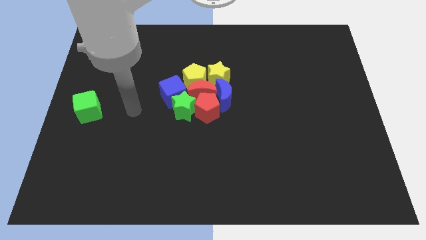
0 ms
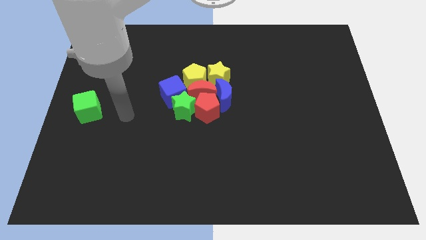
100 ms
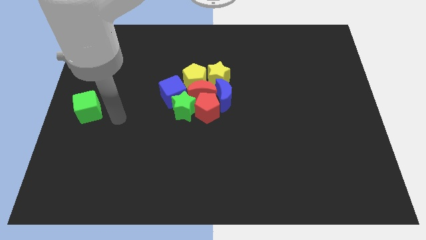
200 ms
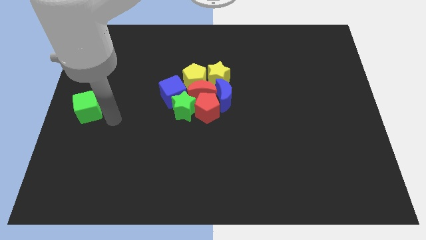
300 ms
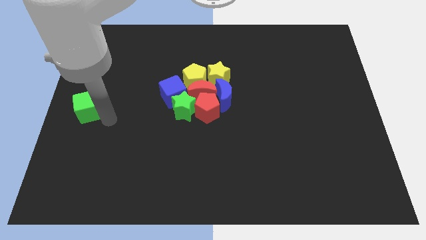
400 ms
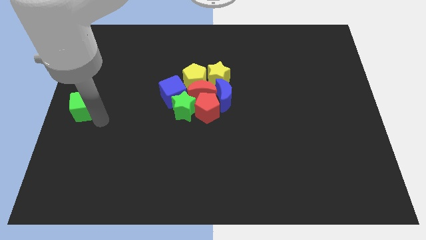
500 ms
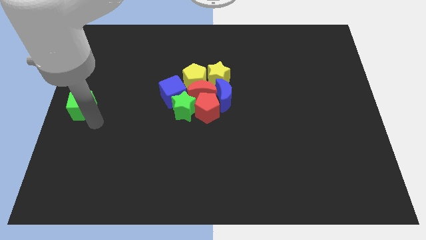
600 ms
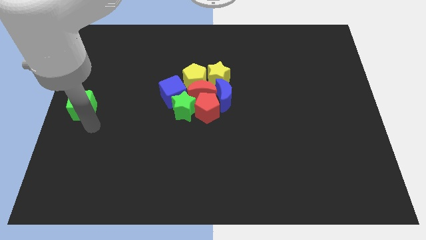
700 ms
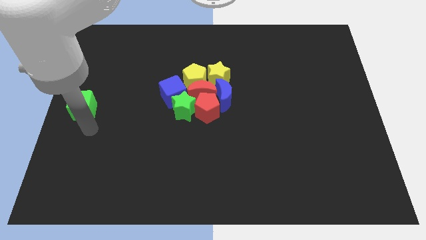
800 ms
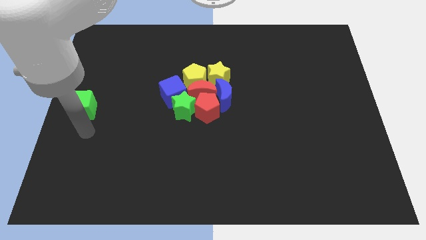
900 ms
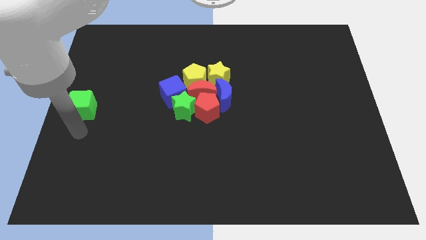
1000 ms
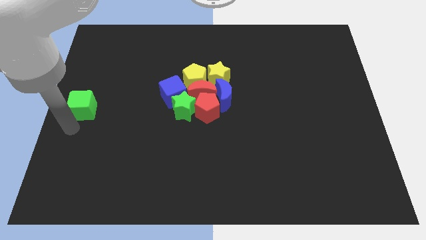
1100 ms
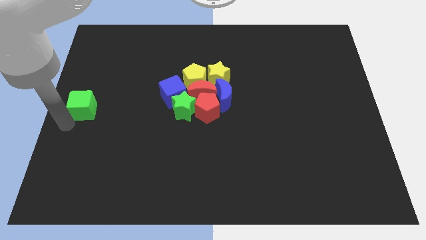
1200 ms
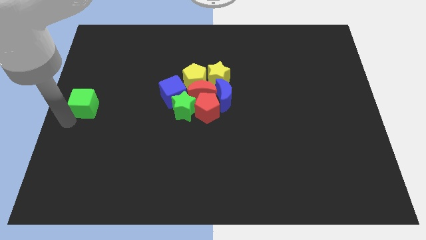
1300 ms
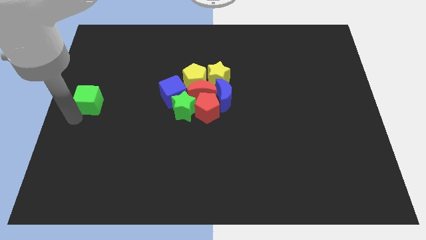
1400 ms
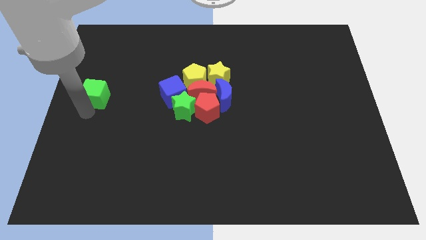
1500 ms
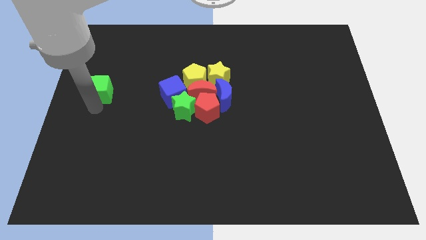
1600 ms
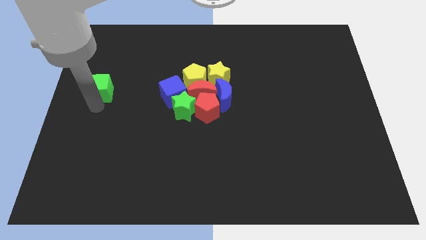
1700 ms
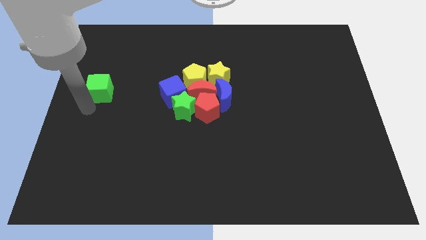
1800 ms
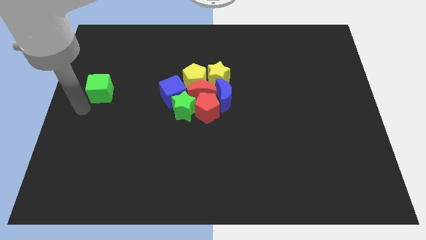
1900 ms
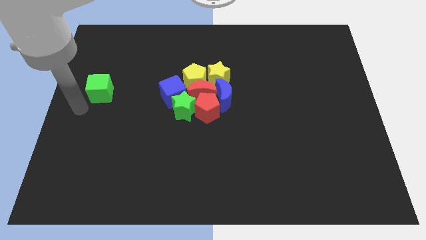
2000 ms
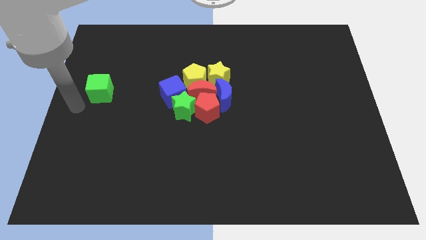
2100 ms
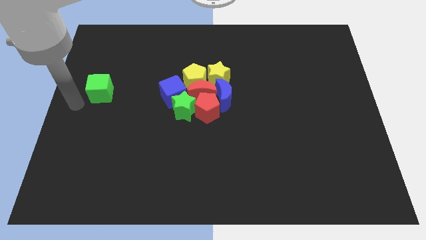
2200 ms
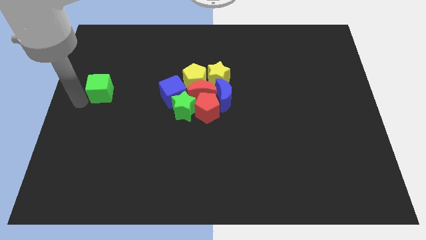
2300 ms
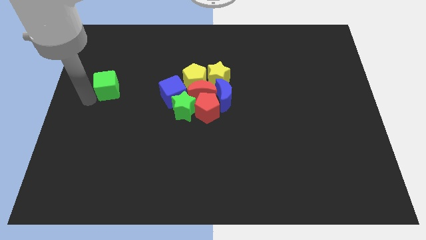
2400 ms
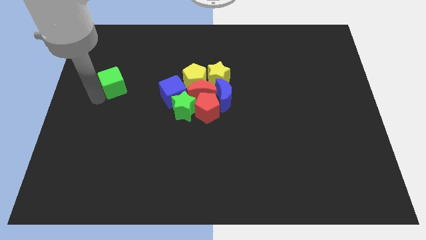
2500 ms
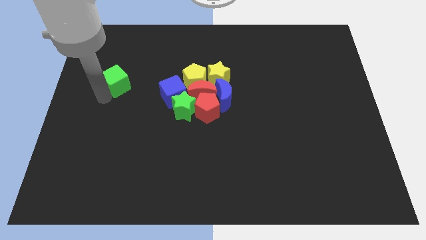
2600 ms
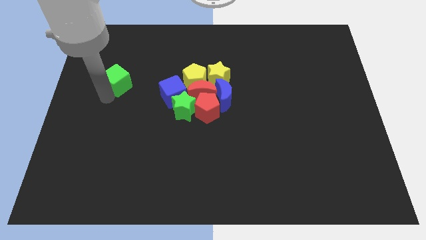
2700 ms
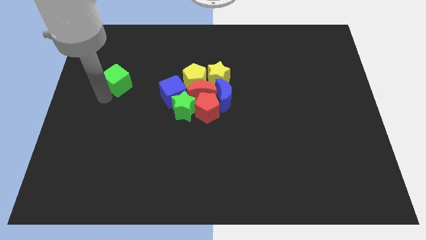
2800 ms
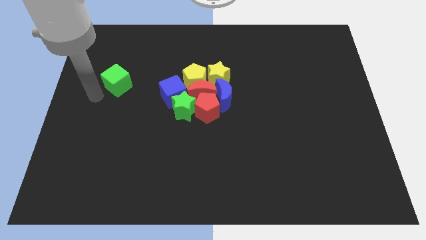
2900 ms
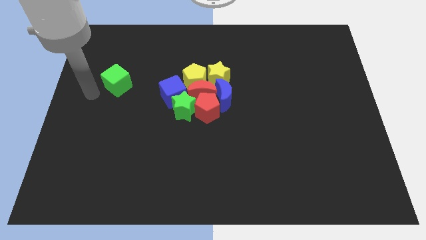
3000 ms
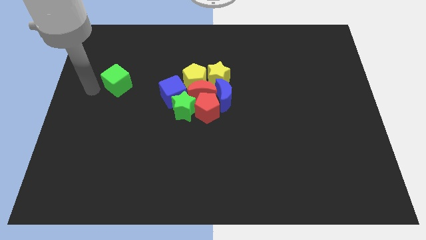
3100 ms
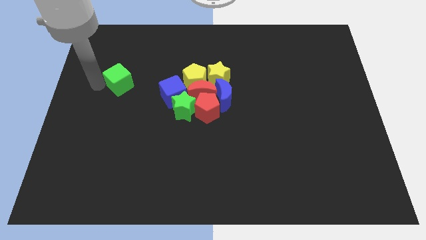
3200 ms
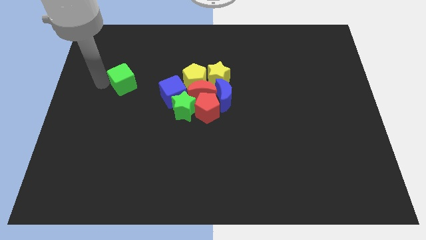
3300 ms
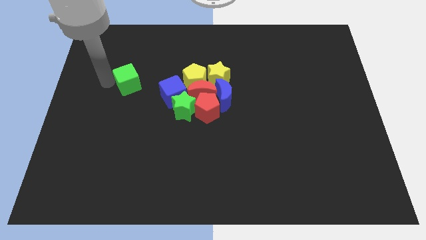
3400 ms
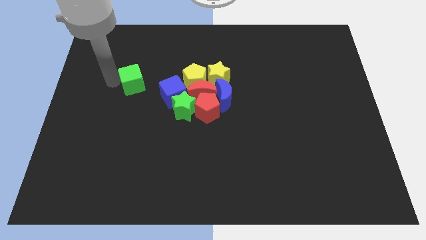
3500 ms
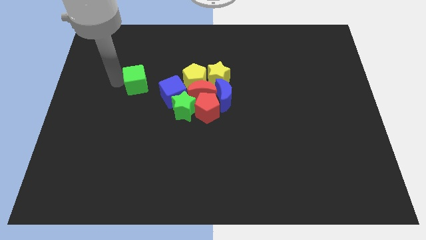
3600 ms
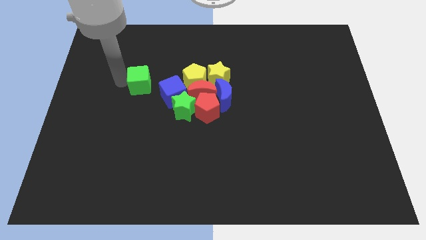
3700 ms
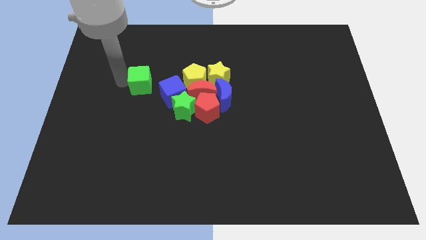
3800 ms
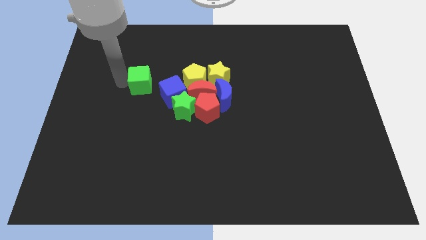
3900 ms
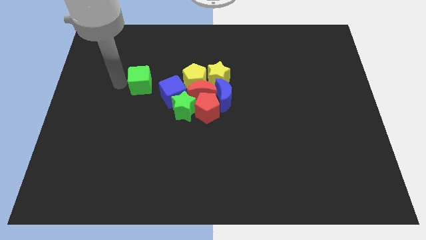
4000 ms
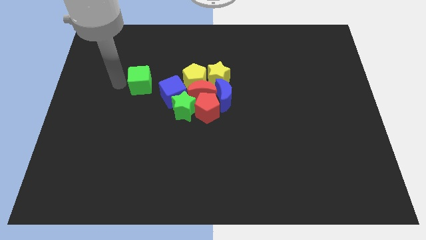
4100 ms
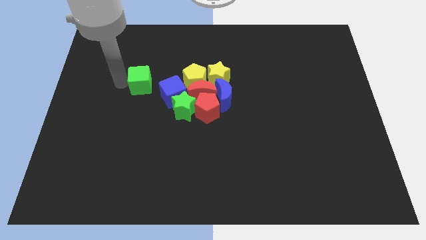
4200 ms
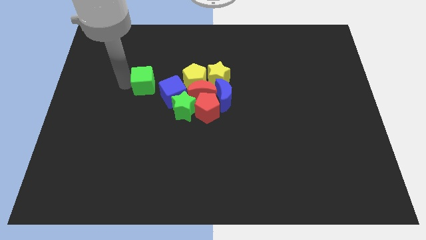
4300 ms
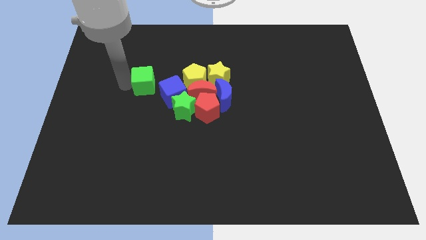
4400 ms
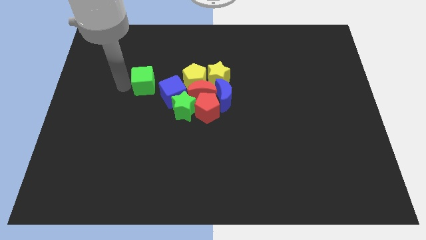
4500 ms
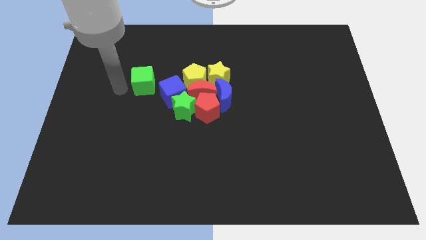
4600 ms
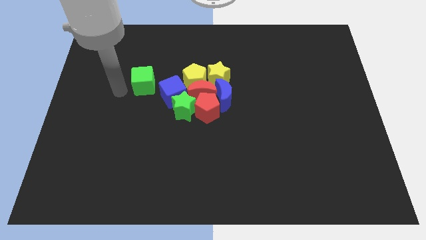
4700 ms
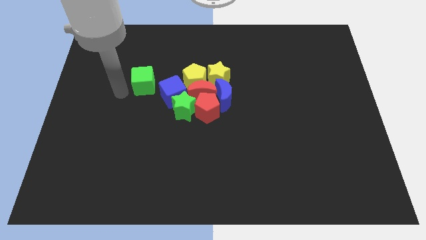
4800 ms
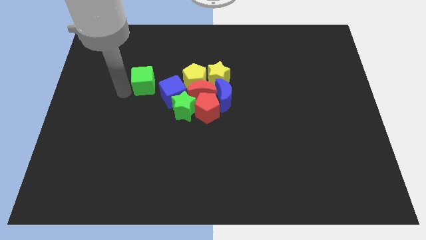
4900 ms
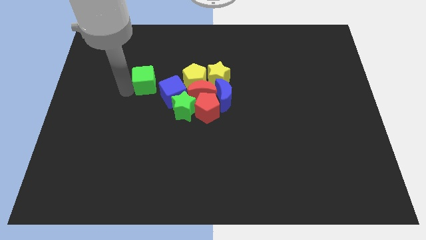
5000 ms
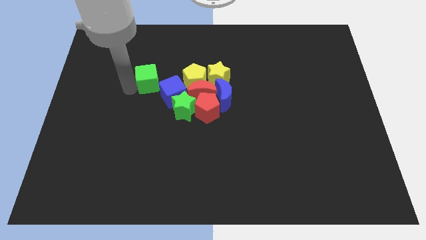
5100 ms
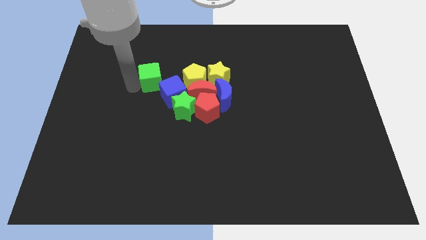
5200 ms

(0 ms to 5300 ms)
move the green cube to the top left side of the blue cube

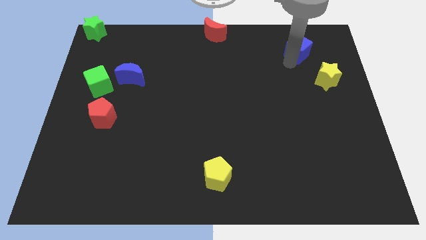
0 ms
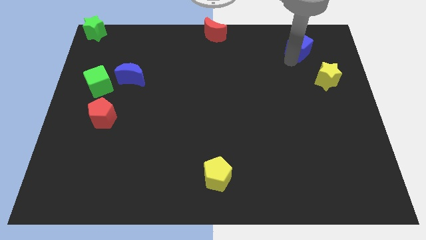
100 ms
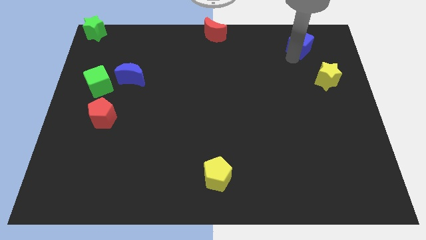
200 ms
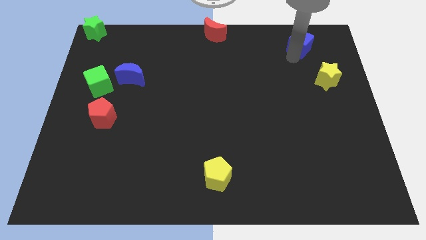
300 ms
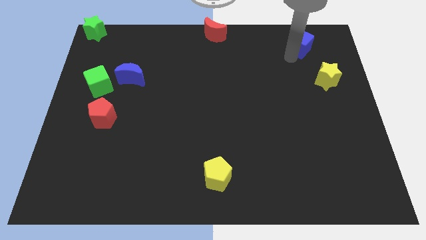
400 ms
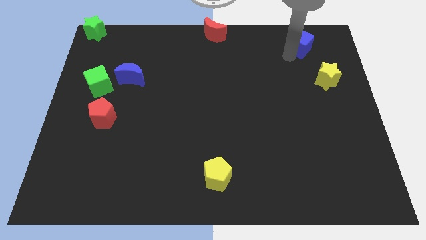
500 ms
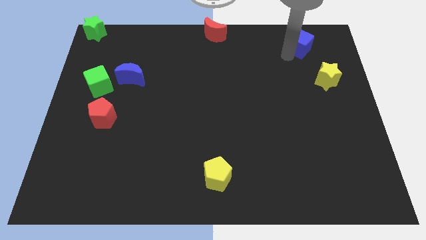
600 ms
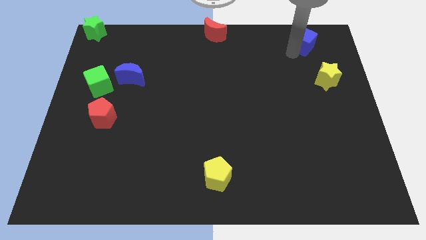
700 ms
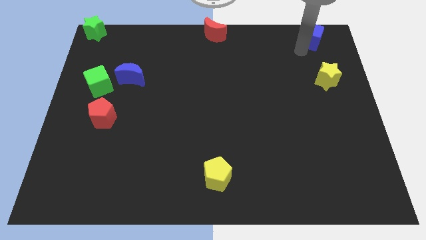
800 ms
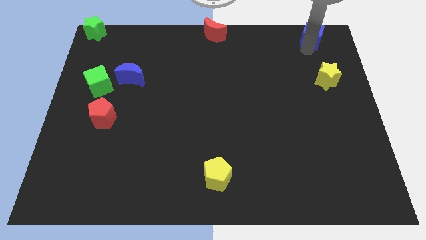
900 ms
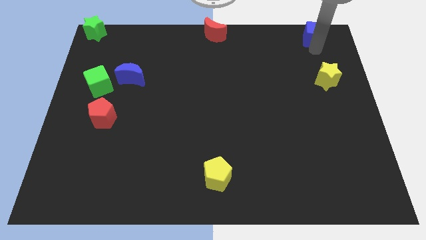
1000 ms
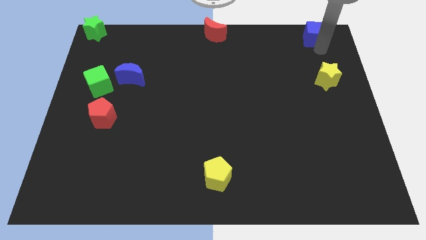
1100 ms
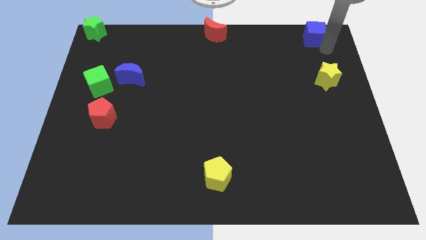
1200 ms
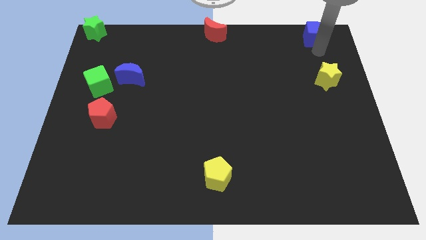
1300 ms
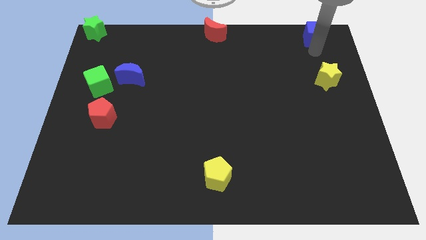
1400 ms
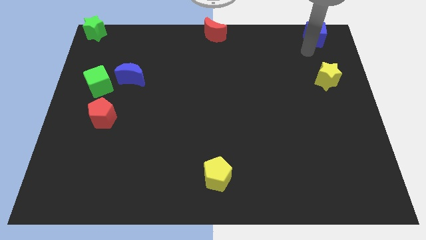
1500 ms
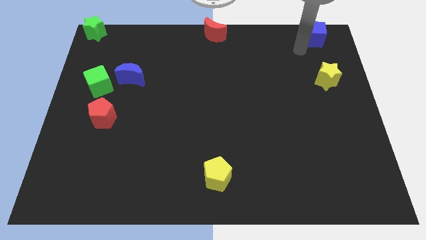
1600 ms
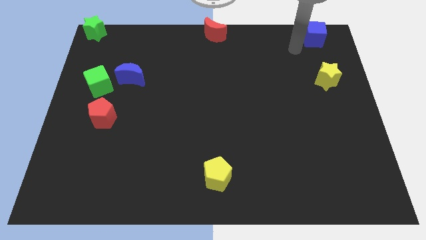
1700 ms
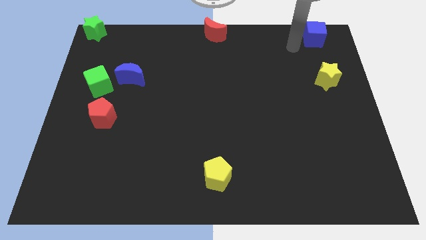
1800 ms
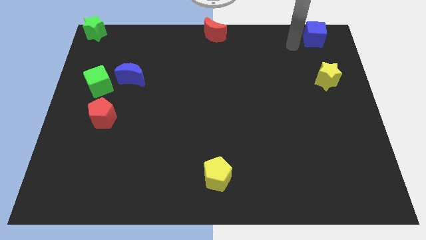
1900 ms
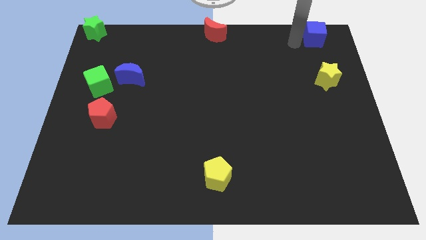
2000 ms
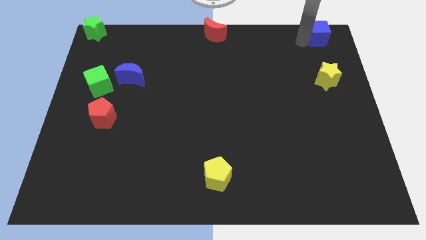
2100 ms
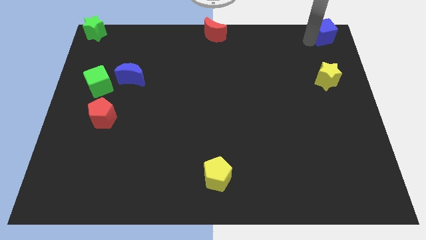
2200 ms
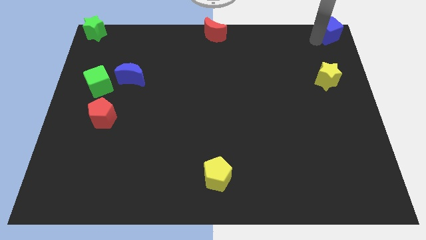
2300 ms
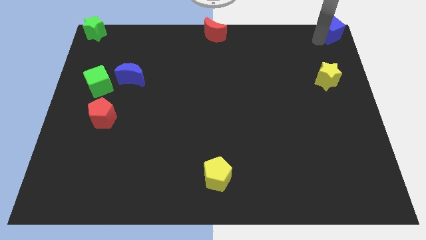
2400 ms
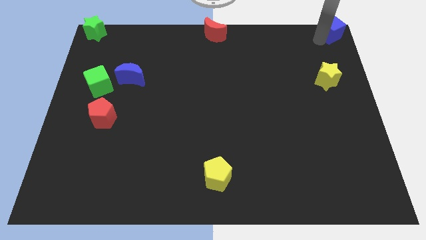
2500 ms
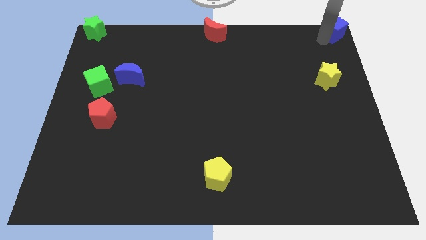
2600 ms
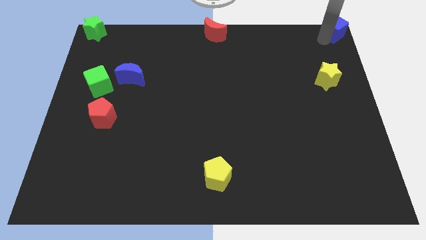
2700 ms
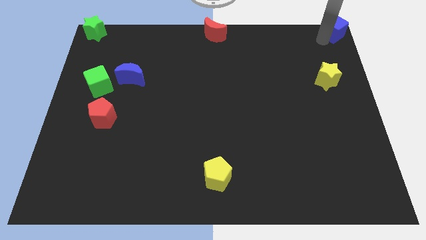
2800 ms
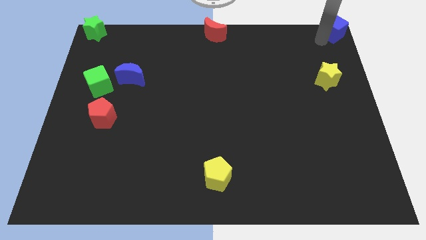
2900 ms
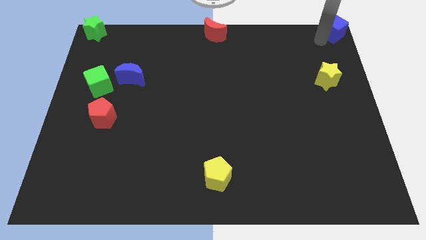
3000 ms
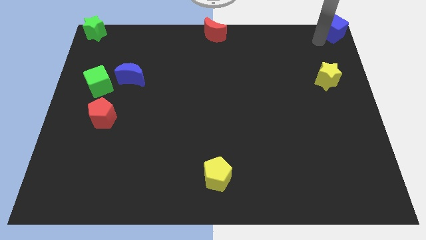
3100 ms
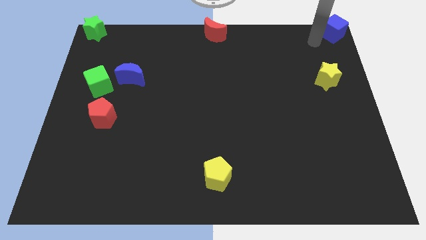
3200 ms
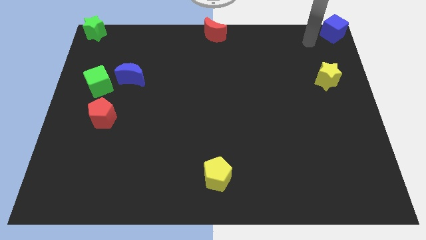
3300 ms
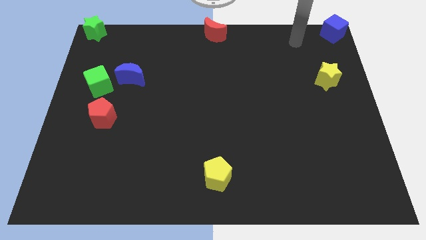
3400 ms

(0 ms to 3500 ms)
push the blue cube at the top right corner of the board
